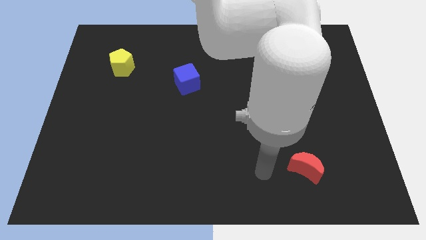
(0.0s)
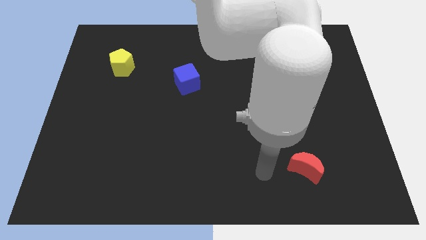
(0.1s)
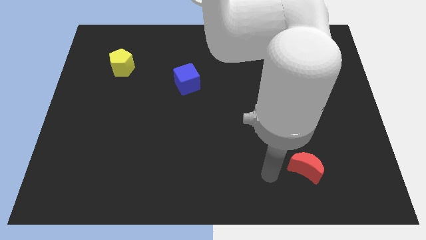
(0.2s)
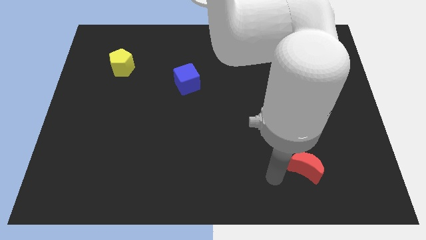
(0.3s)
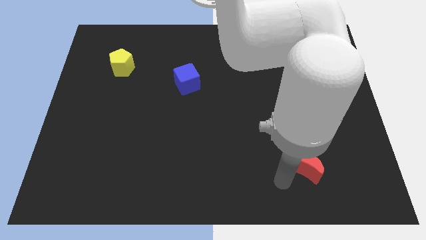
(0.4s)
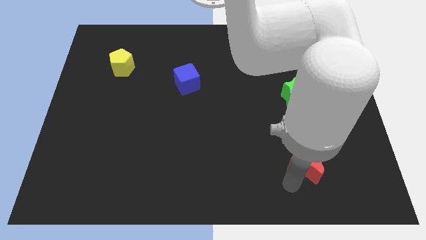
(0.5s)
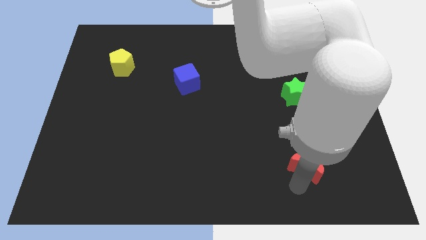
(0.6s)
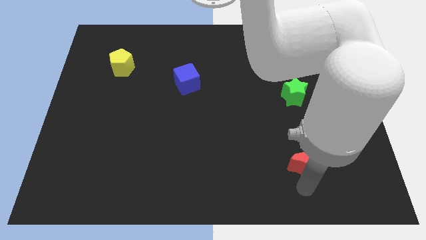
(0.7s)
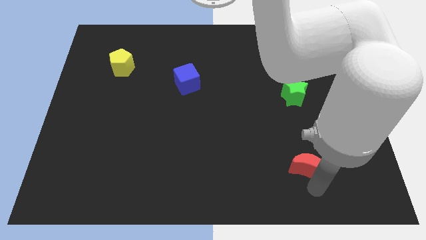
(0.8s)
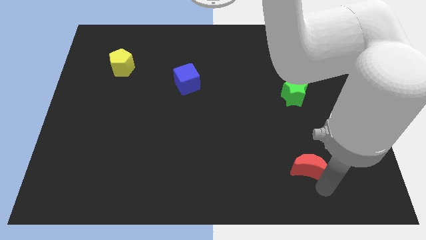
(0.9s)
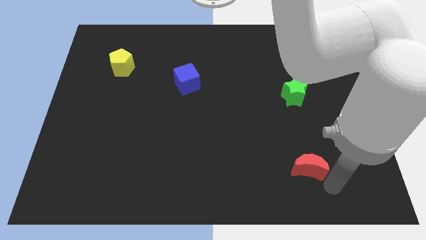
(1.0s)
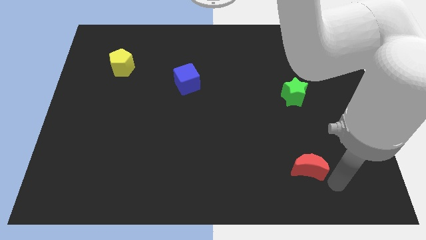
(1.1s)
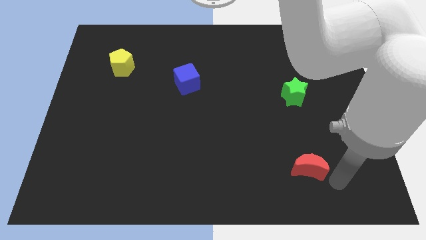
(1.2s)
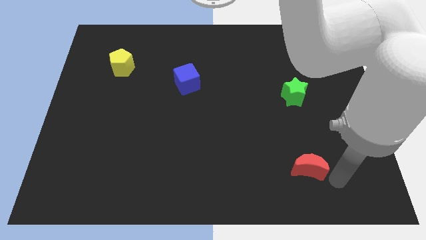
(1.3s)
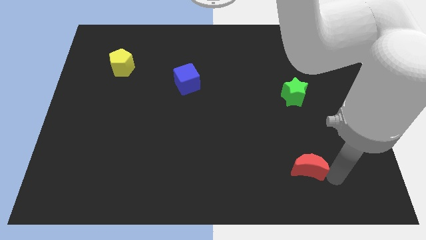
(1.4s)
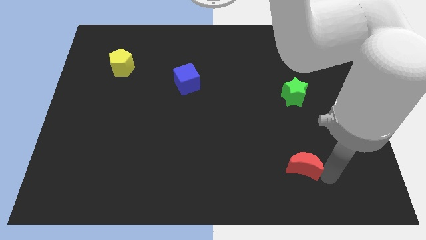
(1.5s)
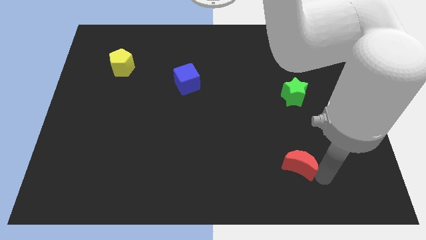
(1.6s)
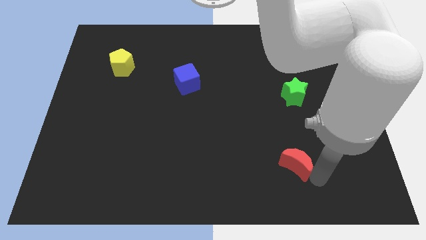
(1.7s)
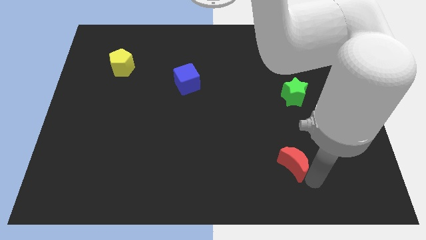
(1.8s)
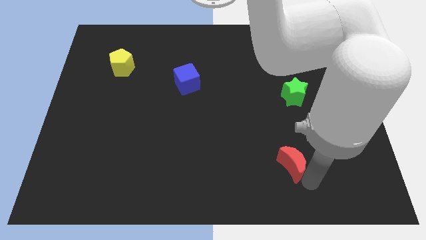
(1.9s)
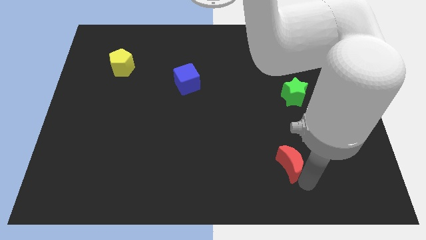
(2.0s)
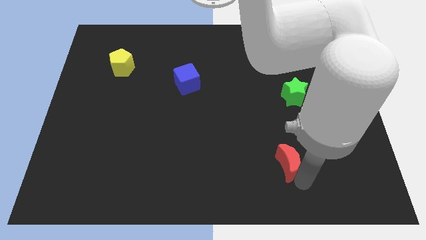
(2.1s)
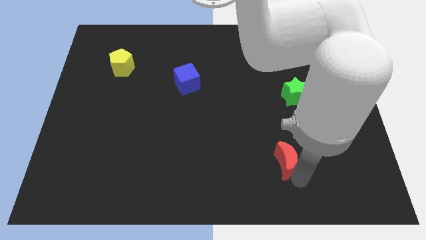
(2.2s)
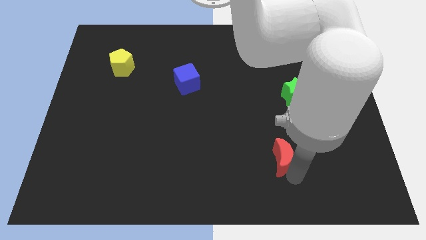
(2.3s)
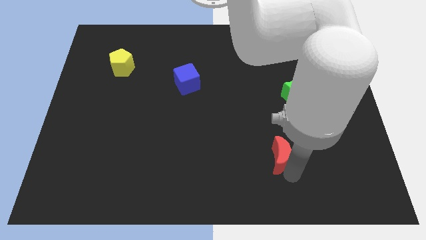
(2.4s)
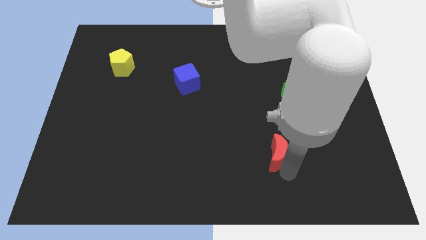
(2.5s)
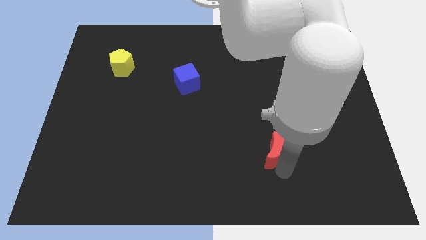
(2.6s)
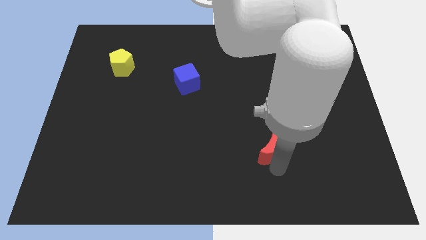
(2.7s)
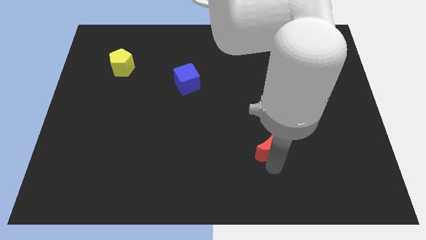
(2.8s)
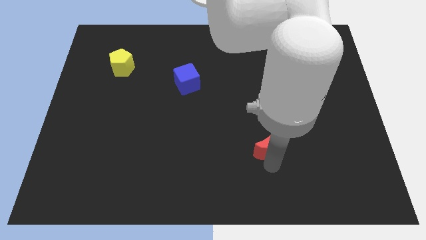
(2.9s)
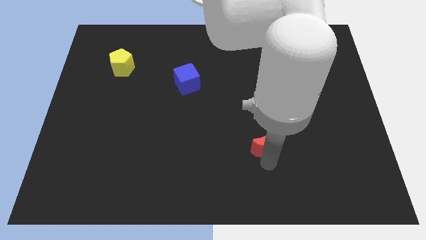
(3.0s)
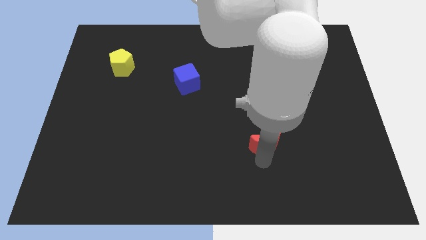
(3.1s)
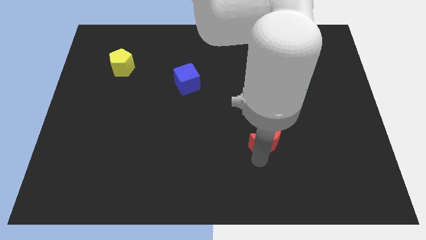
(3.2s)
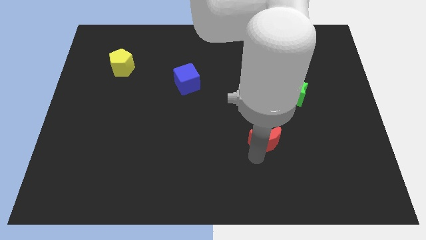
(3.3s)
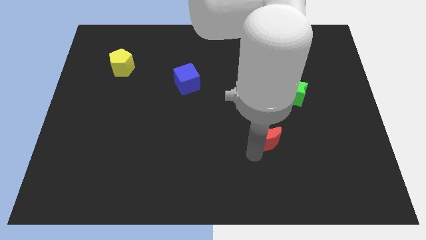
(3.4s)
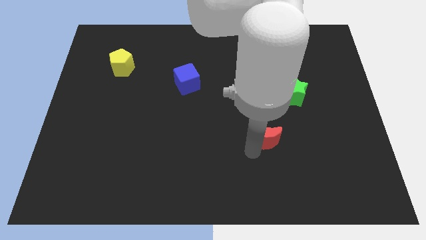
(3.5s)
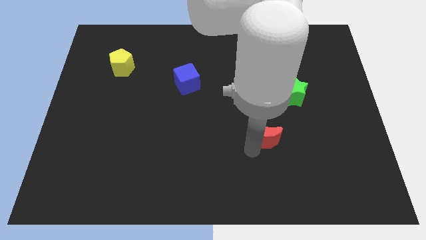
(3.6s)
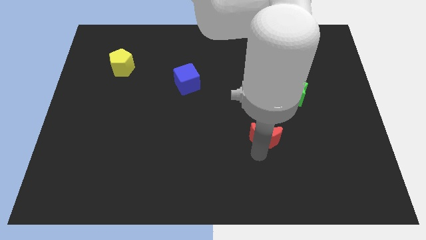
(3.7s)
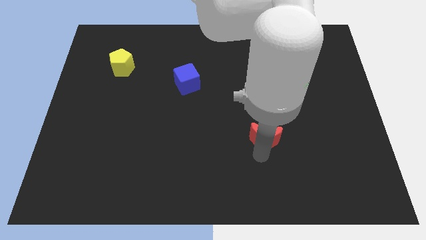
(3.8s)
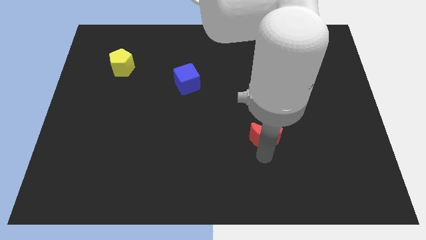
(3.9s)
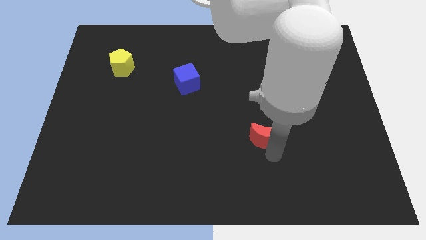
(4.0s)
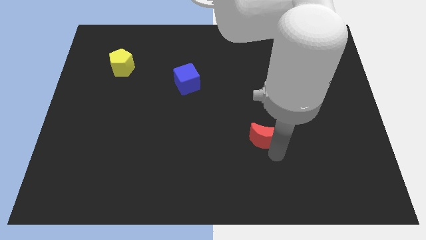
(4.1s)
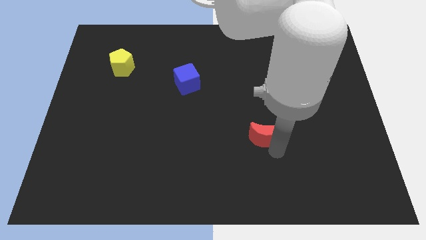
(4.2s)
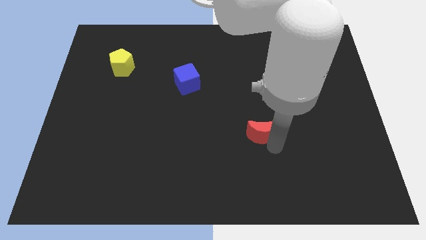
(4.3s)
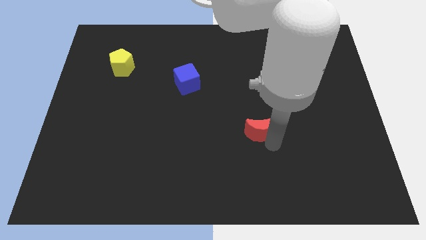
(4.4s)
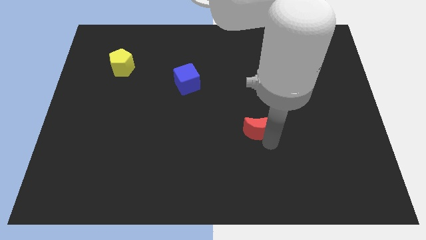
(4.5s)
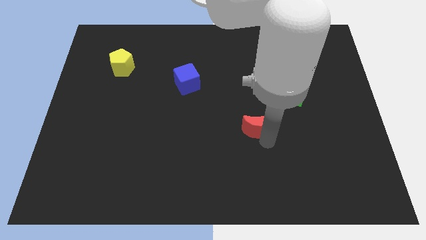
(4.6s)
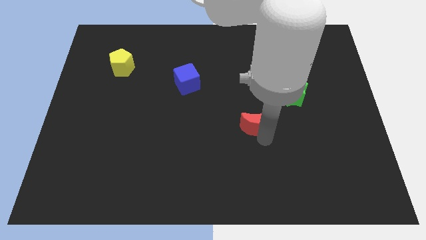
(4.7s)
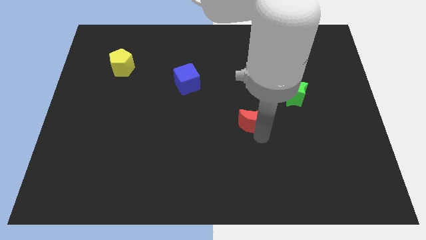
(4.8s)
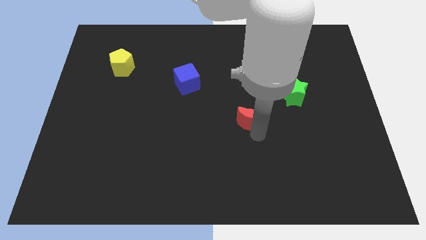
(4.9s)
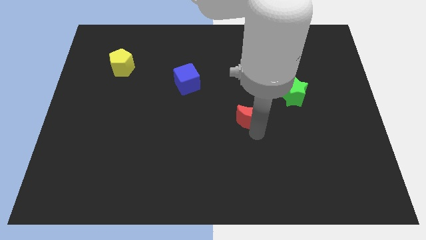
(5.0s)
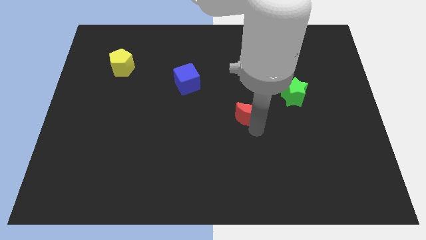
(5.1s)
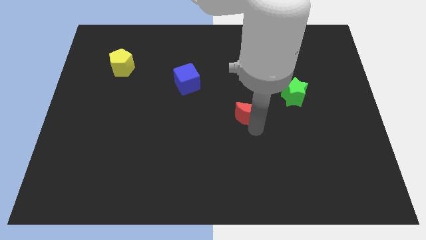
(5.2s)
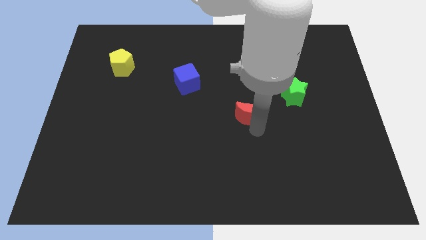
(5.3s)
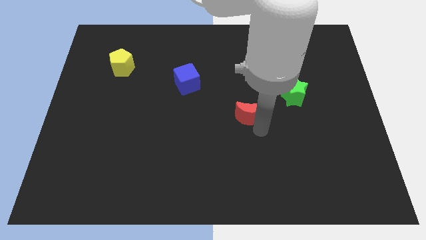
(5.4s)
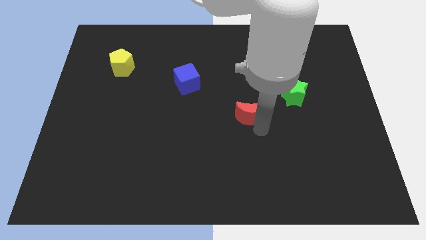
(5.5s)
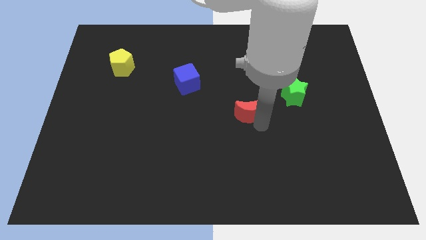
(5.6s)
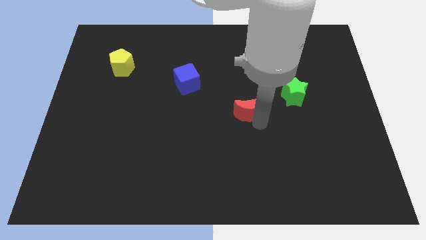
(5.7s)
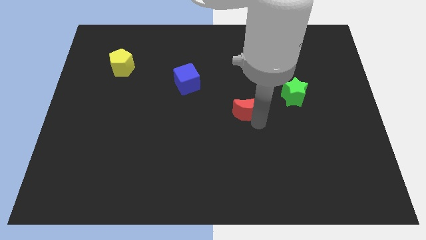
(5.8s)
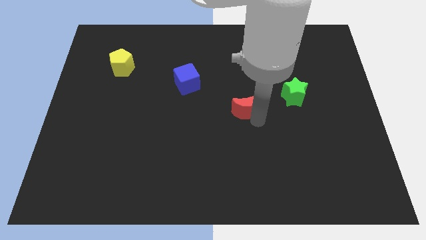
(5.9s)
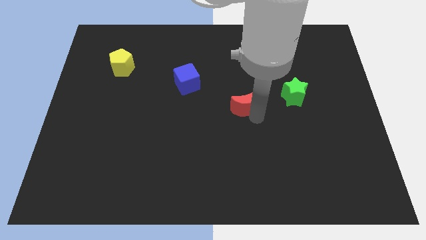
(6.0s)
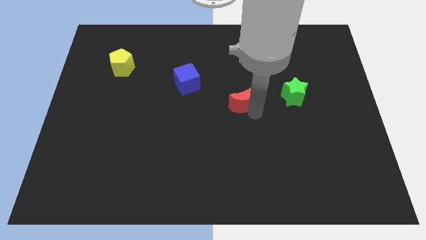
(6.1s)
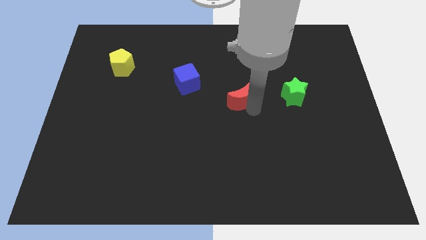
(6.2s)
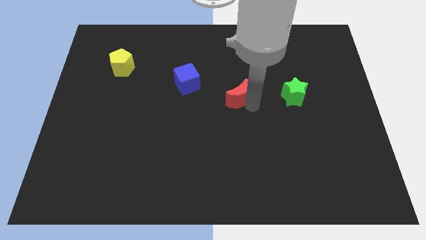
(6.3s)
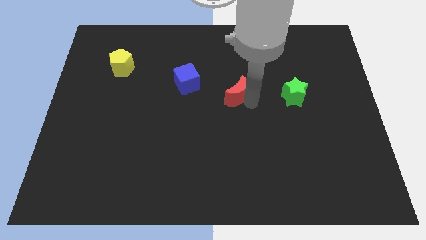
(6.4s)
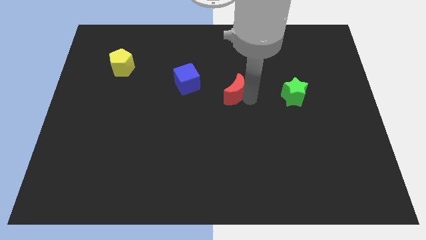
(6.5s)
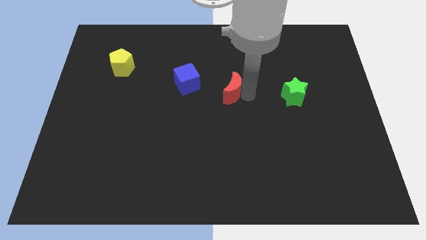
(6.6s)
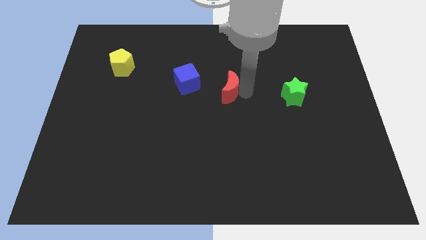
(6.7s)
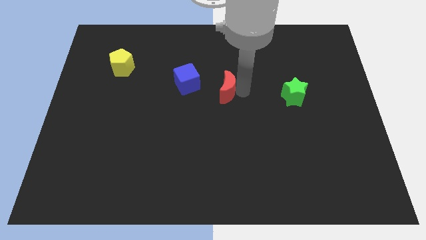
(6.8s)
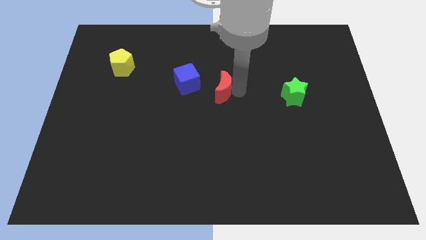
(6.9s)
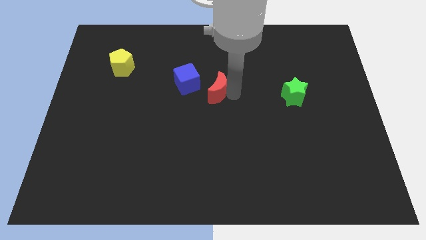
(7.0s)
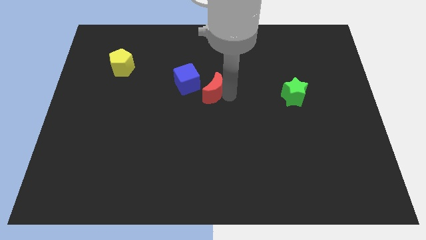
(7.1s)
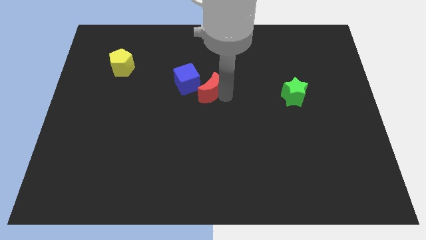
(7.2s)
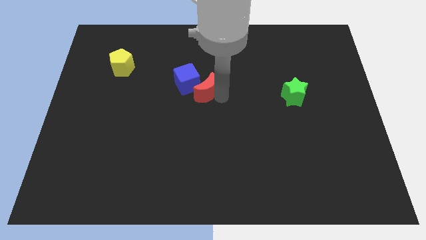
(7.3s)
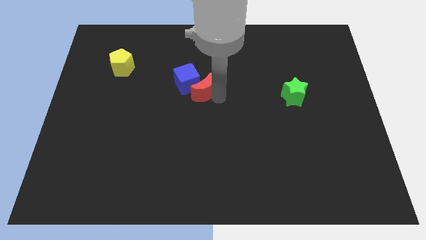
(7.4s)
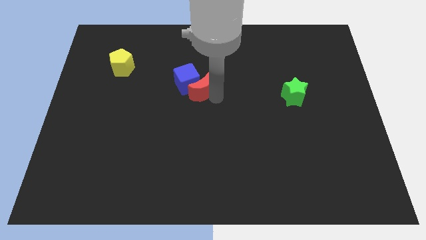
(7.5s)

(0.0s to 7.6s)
put the red moon next to the blue block

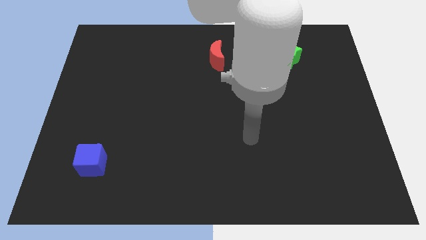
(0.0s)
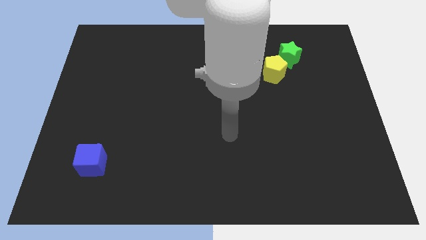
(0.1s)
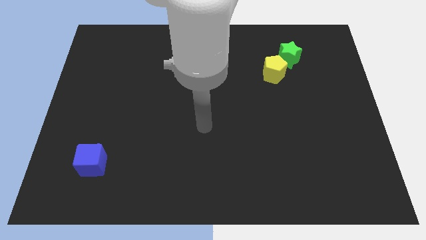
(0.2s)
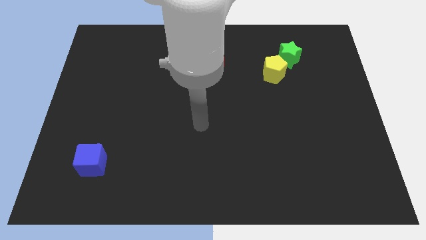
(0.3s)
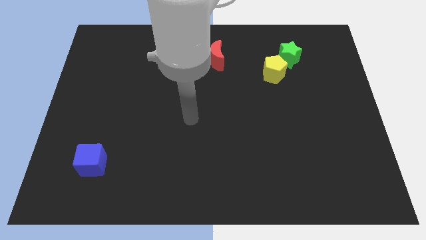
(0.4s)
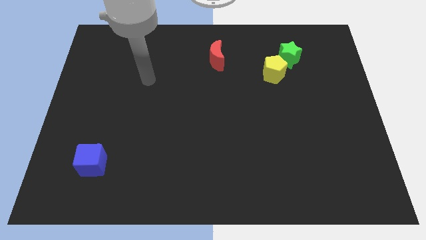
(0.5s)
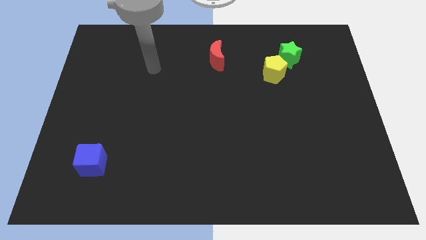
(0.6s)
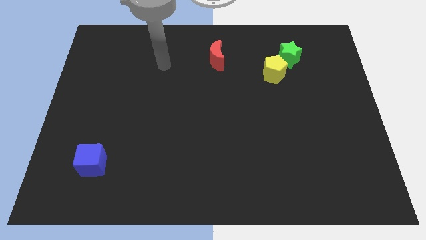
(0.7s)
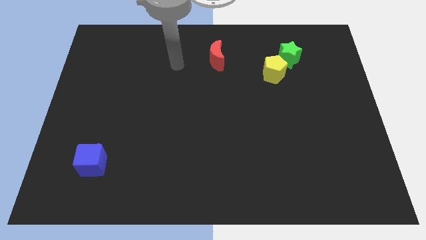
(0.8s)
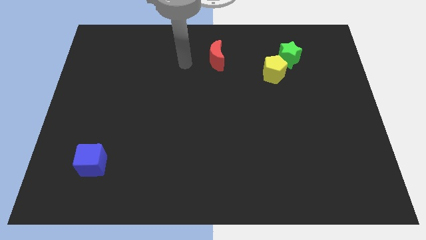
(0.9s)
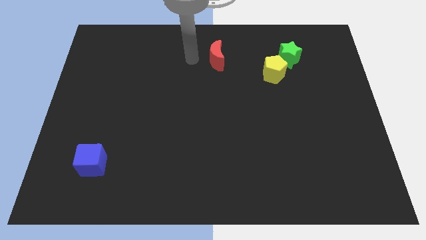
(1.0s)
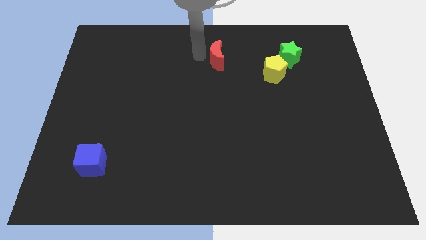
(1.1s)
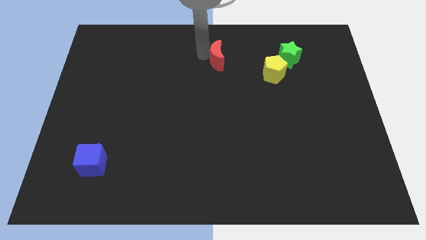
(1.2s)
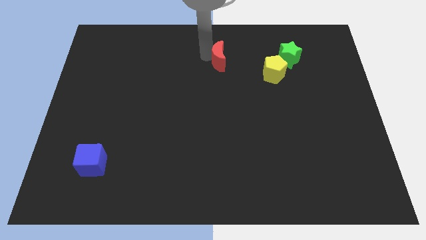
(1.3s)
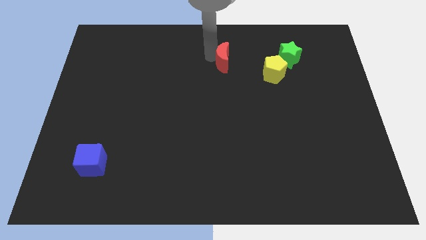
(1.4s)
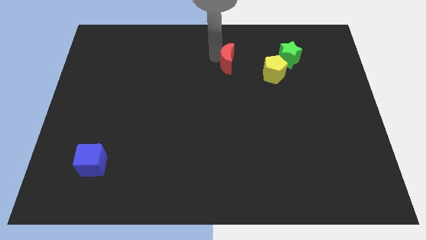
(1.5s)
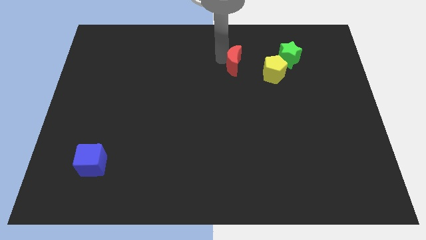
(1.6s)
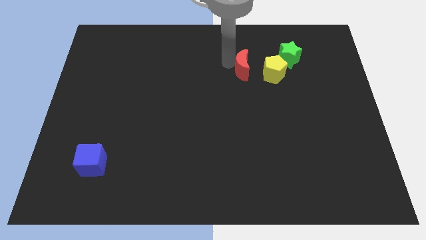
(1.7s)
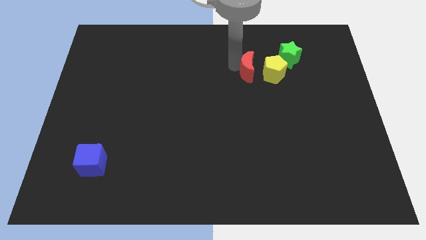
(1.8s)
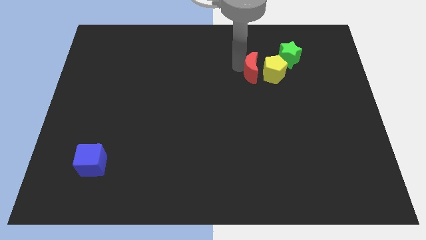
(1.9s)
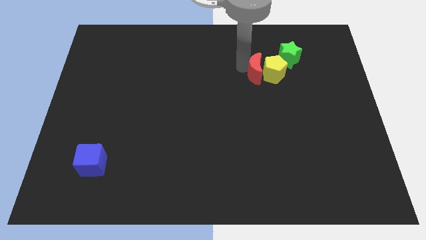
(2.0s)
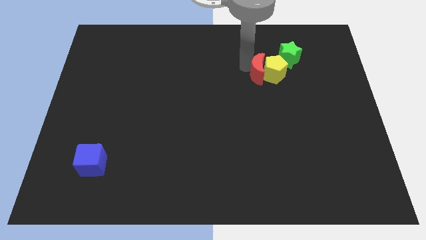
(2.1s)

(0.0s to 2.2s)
push the red block towards the yellow pentagon
